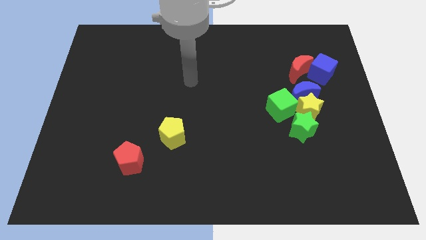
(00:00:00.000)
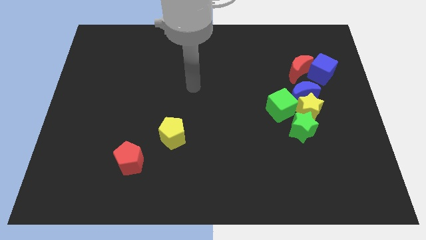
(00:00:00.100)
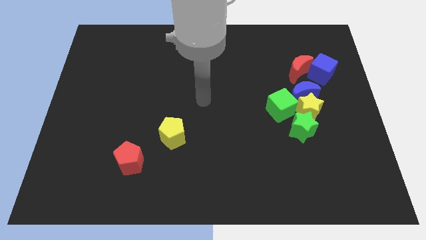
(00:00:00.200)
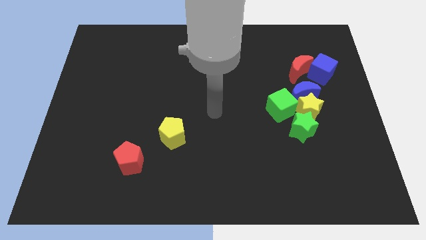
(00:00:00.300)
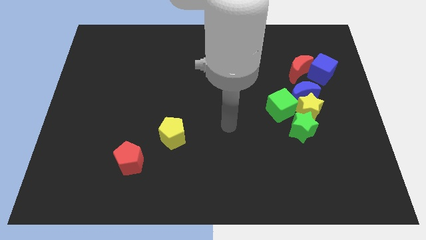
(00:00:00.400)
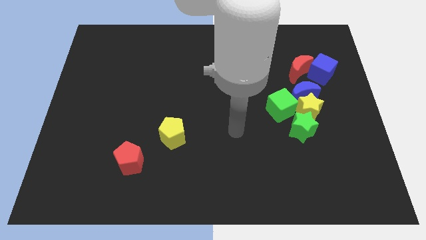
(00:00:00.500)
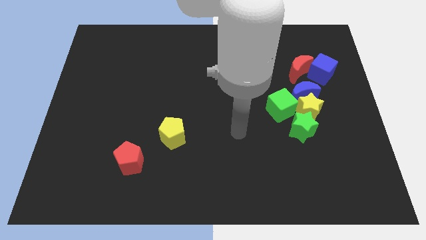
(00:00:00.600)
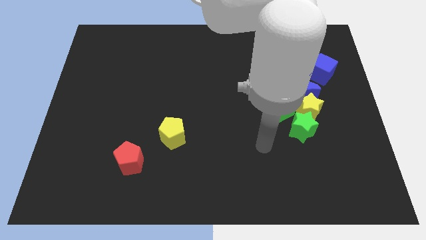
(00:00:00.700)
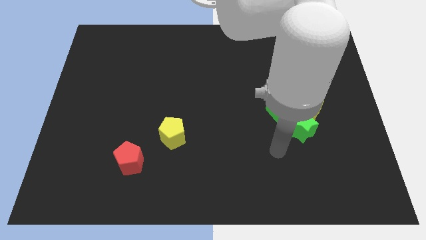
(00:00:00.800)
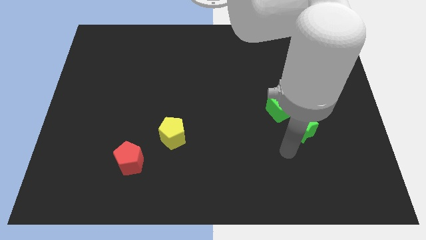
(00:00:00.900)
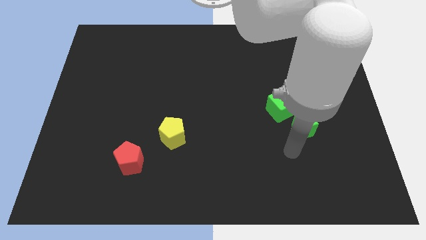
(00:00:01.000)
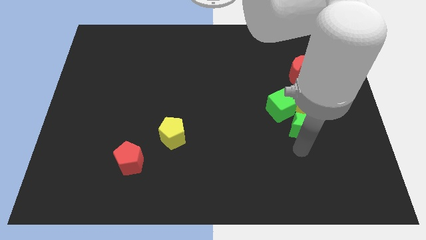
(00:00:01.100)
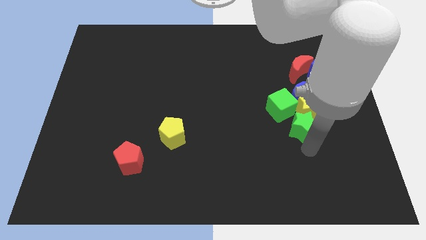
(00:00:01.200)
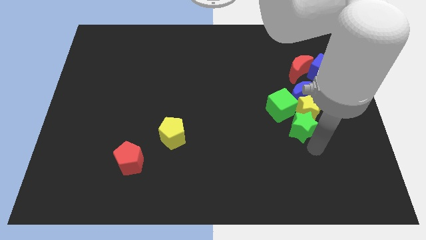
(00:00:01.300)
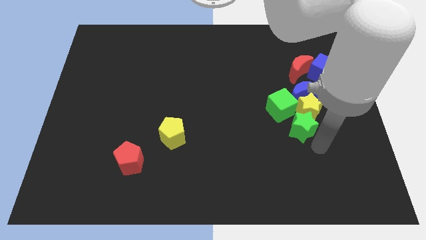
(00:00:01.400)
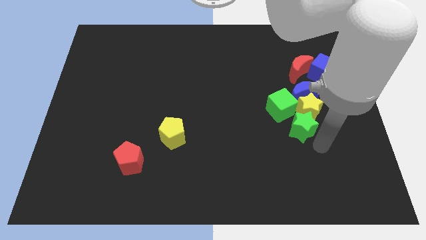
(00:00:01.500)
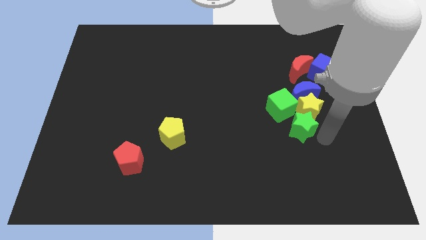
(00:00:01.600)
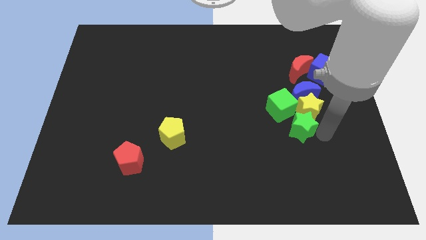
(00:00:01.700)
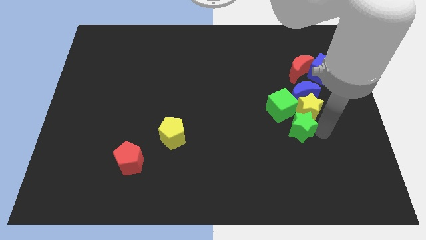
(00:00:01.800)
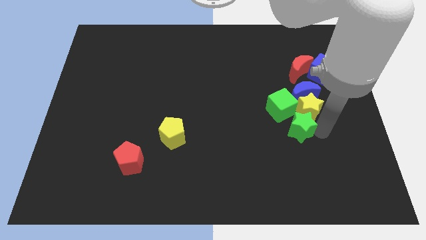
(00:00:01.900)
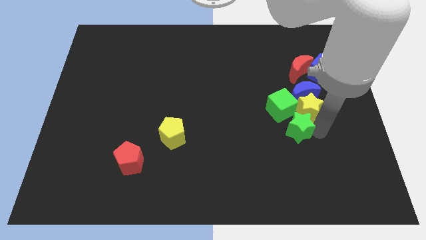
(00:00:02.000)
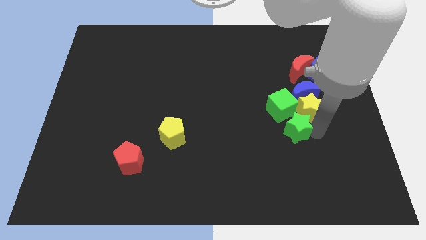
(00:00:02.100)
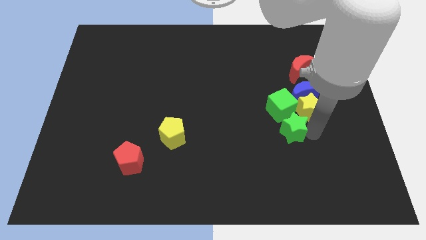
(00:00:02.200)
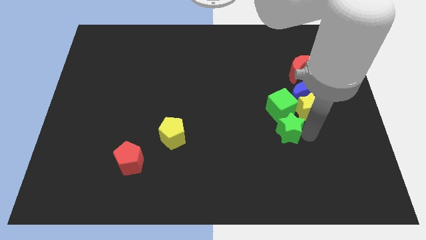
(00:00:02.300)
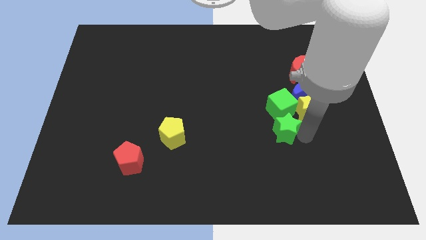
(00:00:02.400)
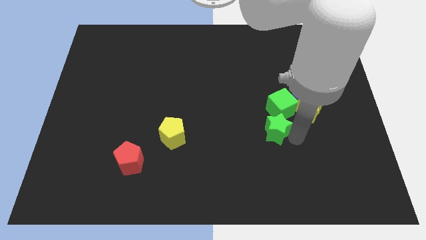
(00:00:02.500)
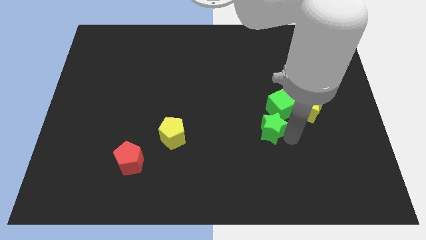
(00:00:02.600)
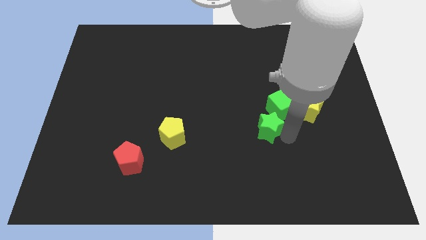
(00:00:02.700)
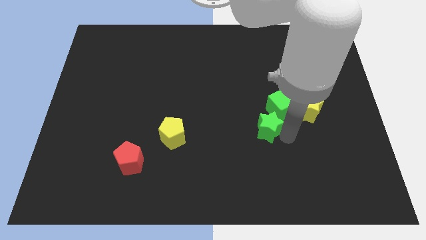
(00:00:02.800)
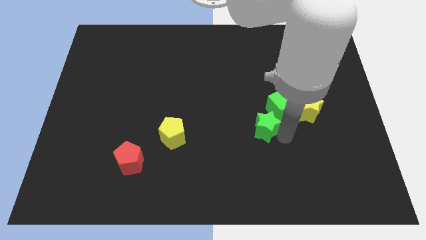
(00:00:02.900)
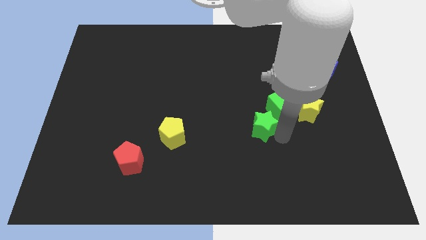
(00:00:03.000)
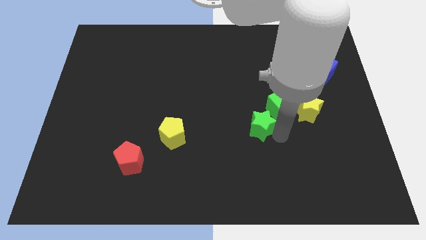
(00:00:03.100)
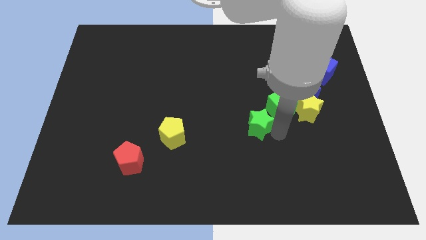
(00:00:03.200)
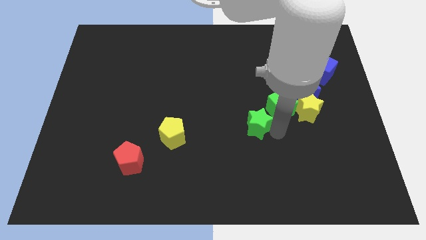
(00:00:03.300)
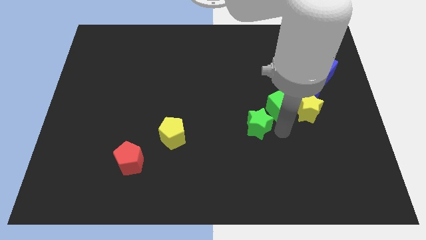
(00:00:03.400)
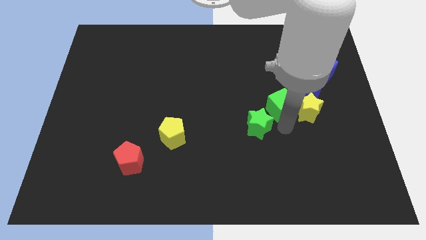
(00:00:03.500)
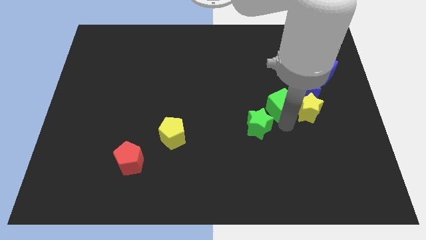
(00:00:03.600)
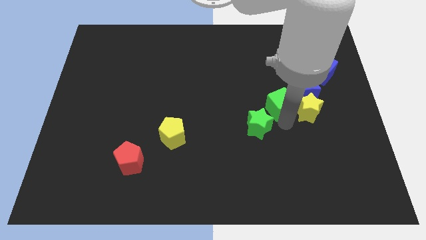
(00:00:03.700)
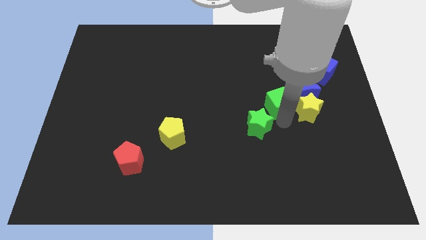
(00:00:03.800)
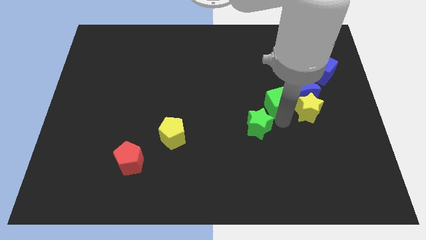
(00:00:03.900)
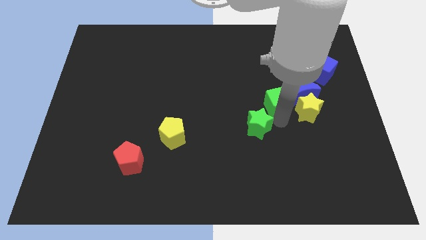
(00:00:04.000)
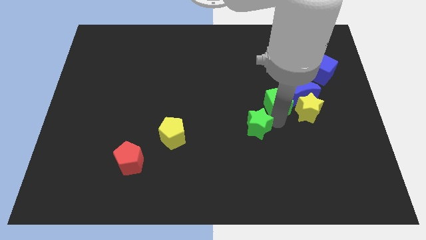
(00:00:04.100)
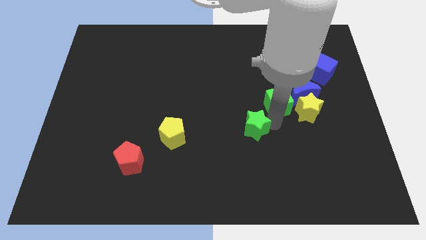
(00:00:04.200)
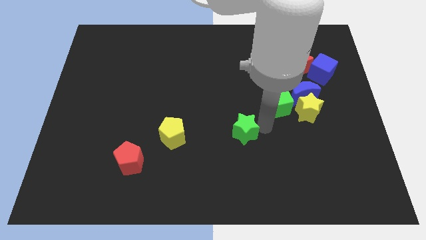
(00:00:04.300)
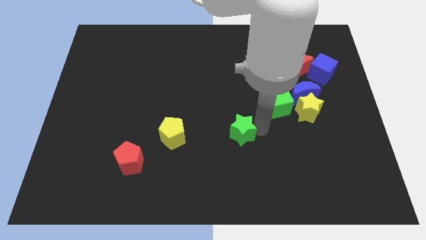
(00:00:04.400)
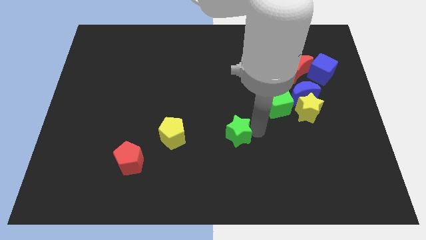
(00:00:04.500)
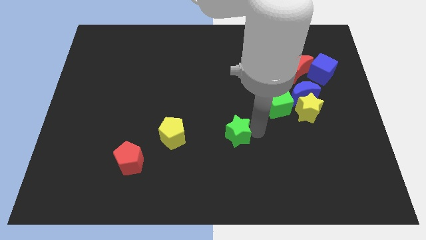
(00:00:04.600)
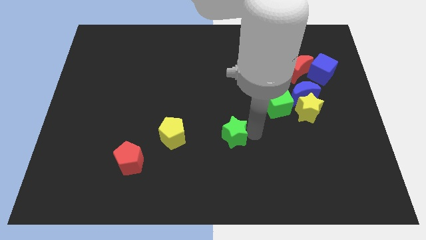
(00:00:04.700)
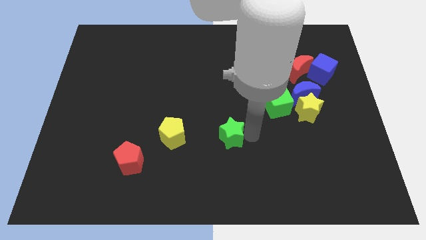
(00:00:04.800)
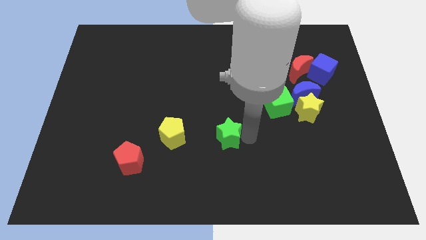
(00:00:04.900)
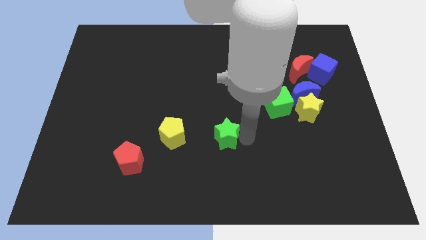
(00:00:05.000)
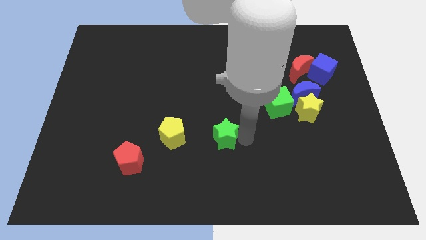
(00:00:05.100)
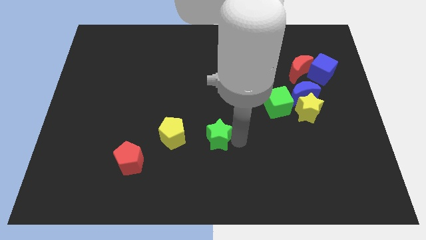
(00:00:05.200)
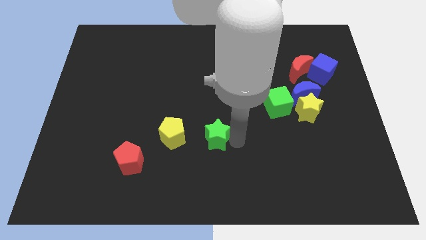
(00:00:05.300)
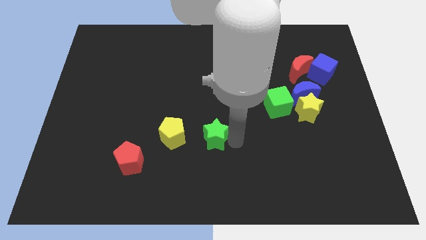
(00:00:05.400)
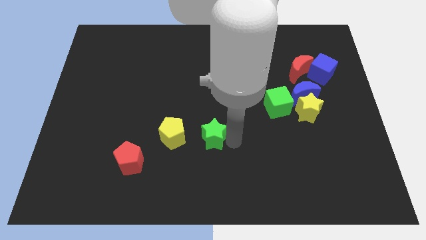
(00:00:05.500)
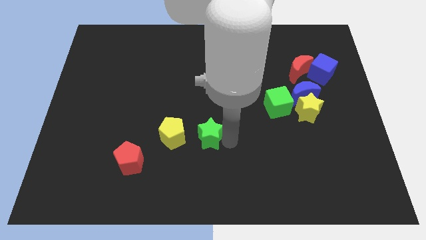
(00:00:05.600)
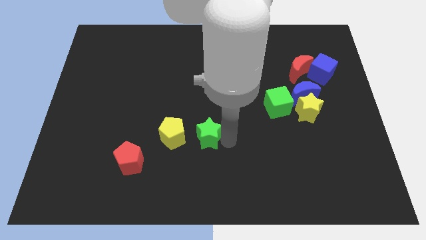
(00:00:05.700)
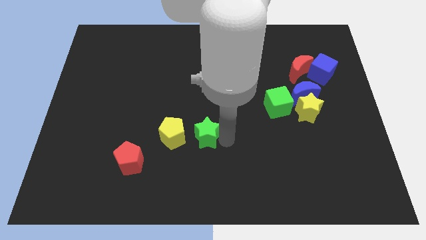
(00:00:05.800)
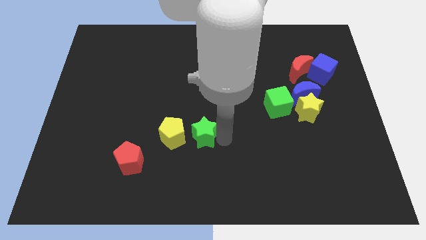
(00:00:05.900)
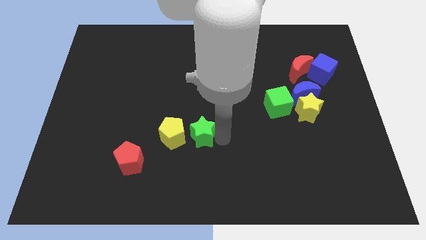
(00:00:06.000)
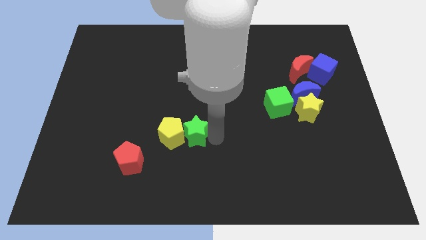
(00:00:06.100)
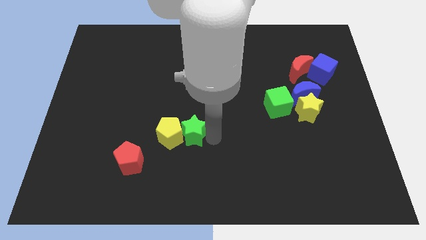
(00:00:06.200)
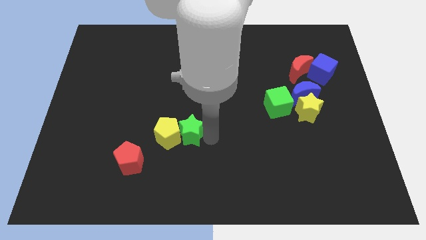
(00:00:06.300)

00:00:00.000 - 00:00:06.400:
put the green star next to the yellow pentagon

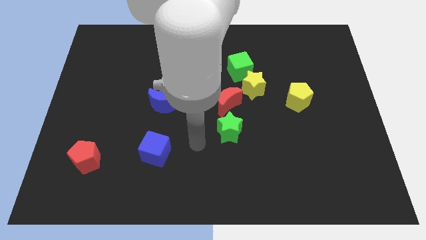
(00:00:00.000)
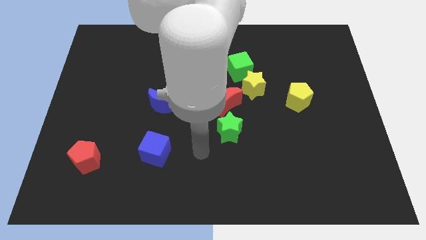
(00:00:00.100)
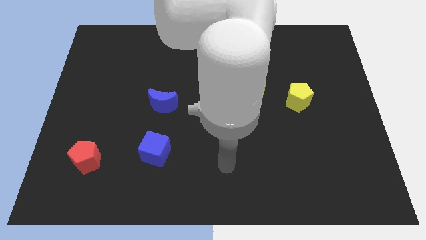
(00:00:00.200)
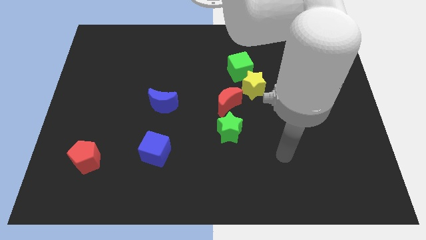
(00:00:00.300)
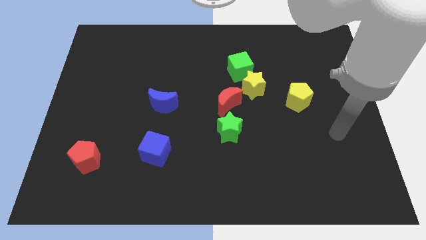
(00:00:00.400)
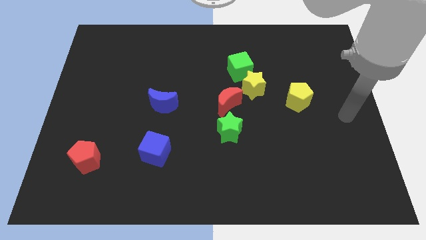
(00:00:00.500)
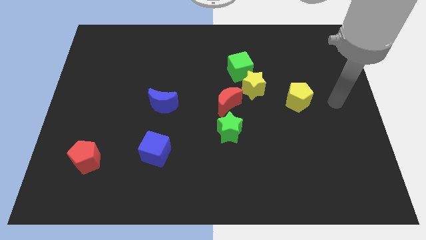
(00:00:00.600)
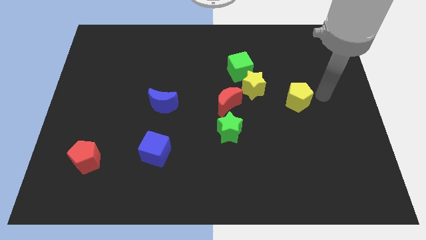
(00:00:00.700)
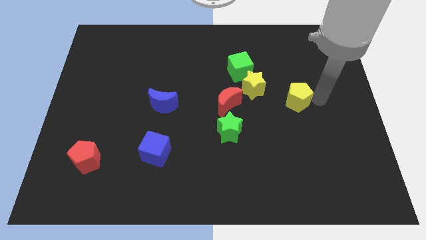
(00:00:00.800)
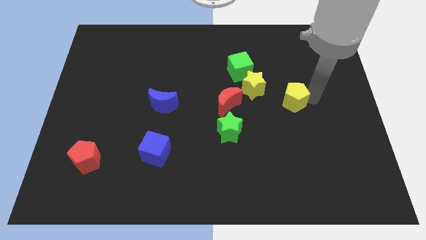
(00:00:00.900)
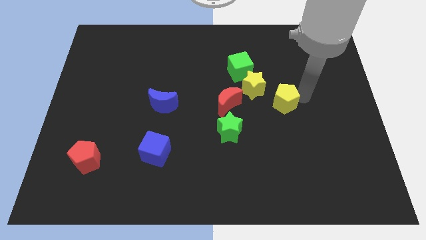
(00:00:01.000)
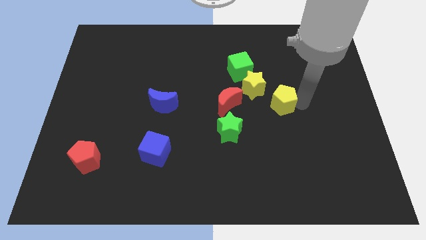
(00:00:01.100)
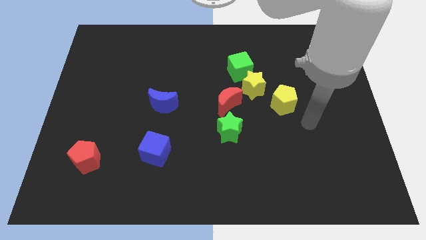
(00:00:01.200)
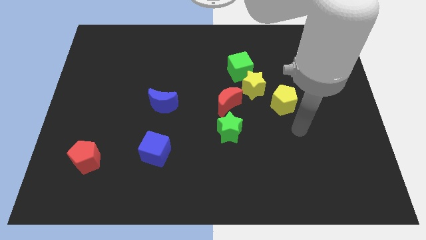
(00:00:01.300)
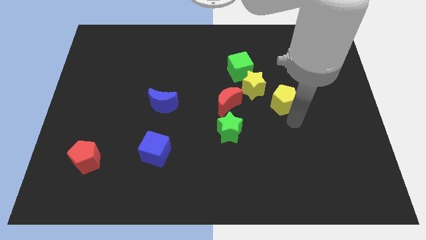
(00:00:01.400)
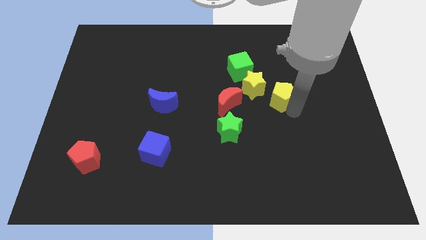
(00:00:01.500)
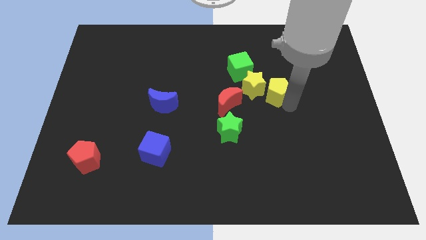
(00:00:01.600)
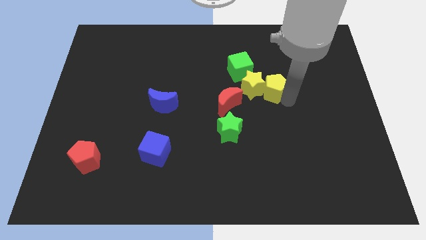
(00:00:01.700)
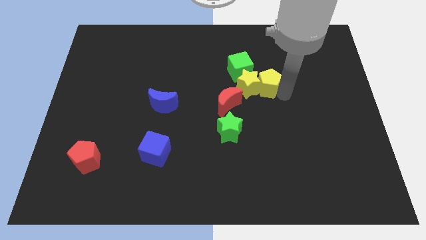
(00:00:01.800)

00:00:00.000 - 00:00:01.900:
push the yellow pentagon next to the yellow star
